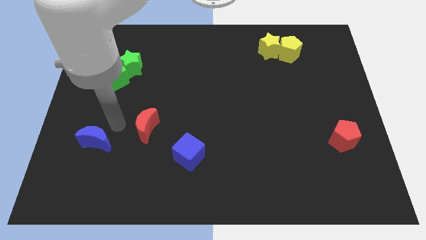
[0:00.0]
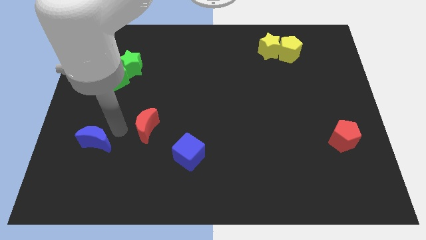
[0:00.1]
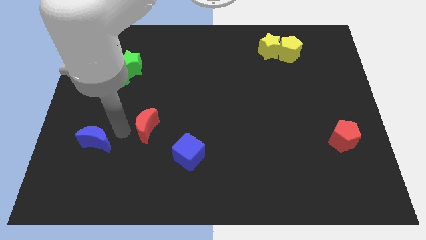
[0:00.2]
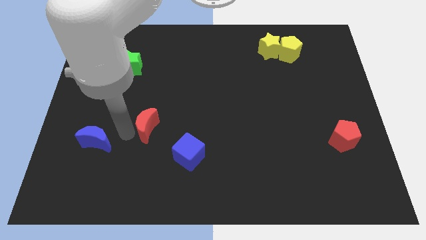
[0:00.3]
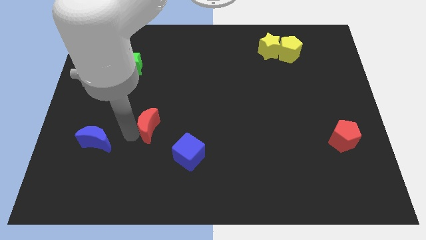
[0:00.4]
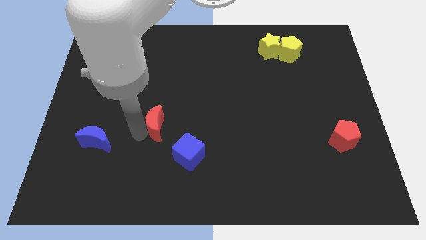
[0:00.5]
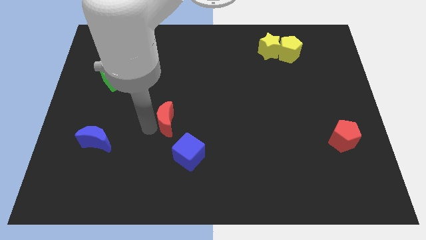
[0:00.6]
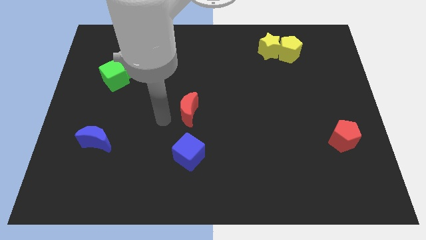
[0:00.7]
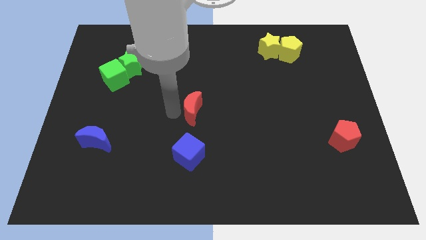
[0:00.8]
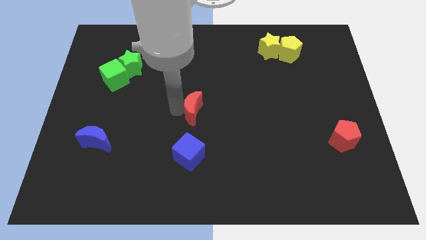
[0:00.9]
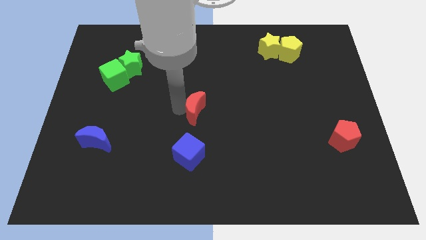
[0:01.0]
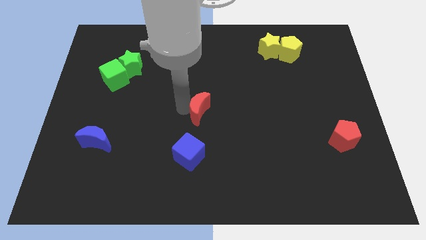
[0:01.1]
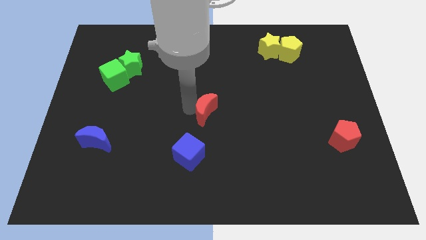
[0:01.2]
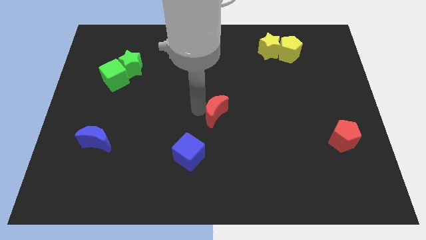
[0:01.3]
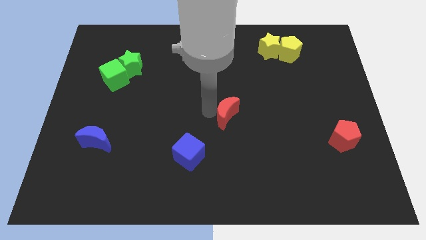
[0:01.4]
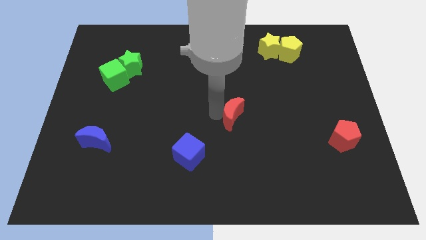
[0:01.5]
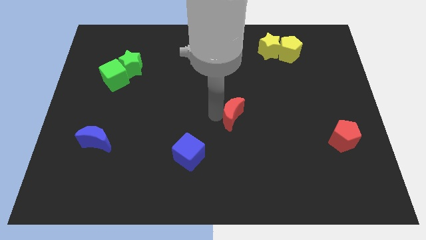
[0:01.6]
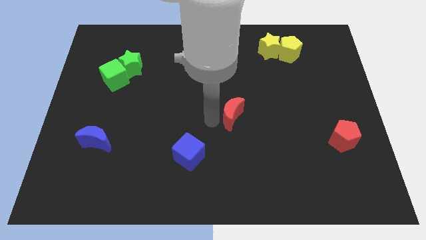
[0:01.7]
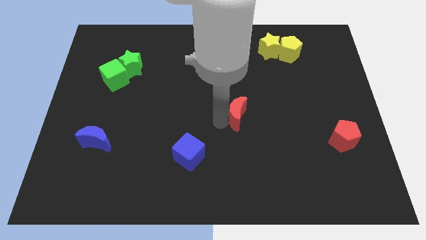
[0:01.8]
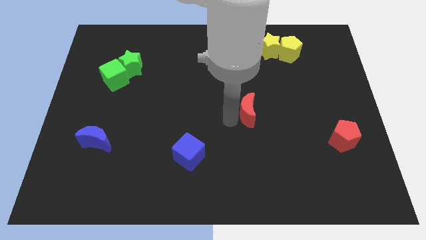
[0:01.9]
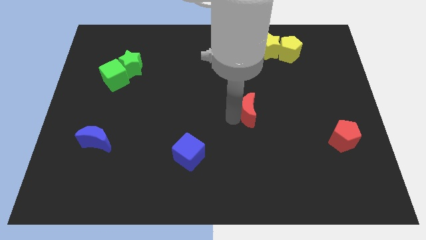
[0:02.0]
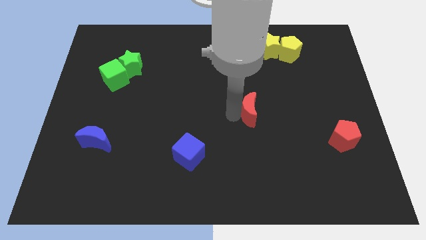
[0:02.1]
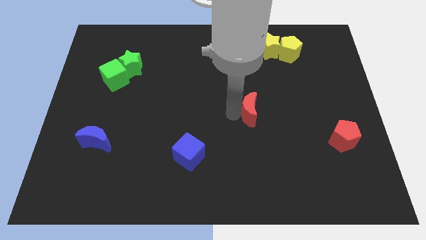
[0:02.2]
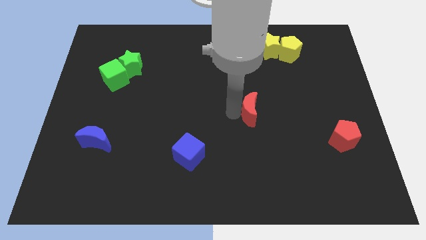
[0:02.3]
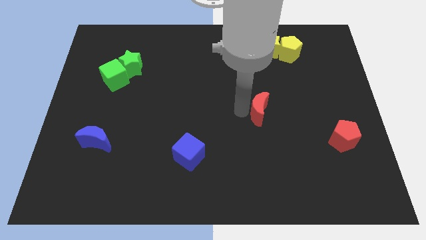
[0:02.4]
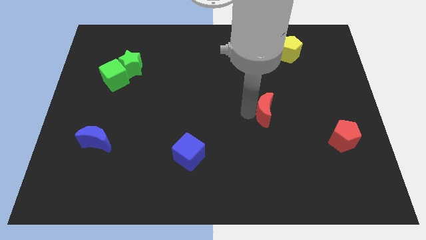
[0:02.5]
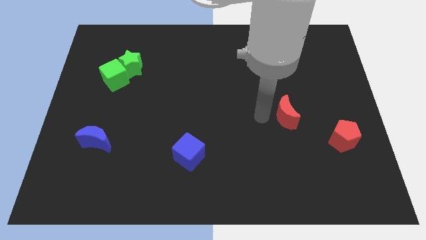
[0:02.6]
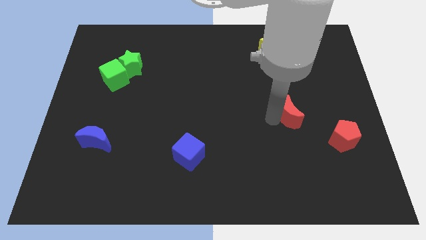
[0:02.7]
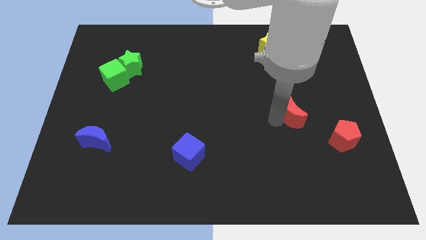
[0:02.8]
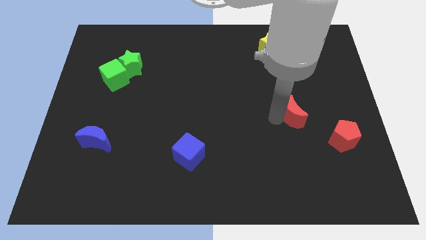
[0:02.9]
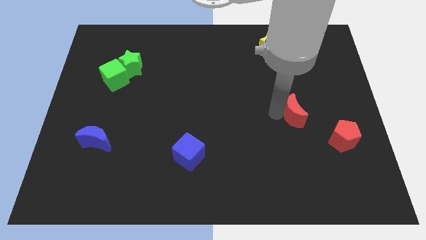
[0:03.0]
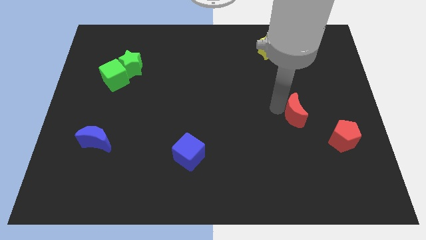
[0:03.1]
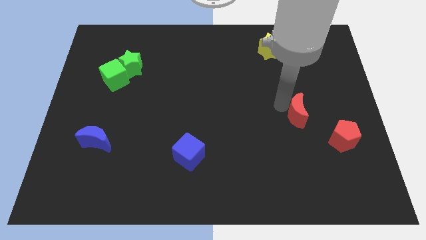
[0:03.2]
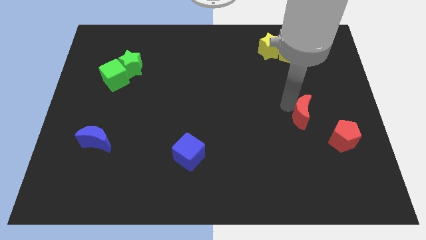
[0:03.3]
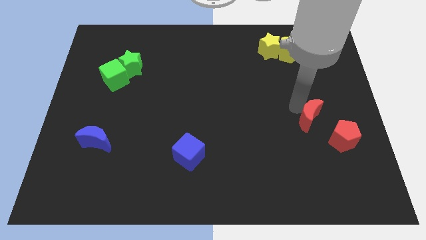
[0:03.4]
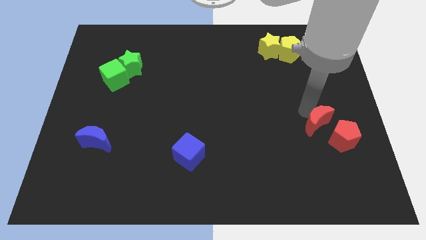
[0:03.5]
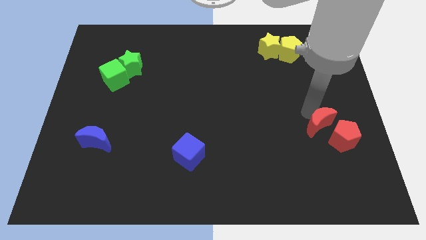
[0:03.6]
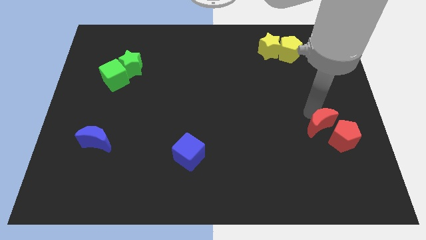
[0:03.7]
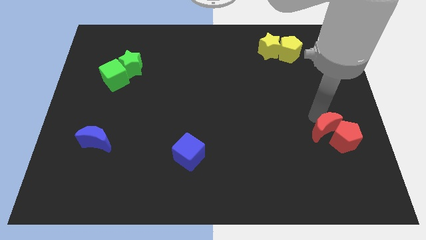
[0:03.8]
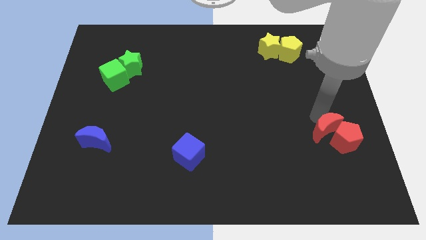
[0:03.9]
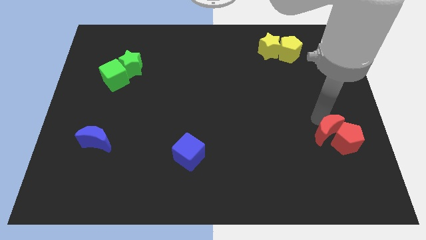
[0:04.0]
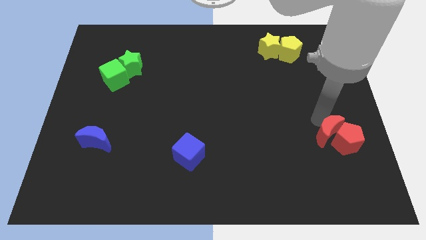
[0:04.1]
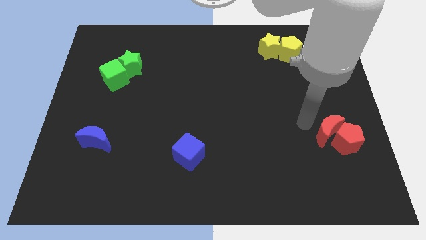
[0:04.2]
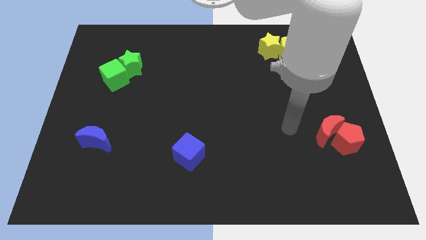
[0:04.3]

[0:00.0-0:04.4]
make the group of red blocks at the right side of the table

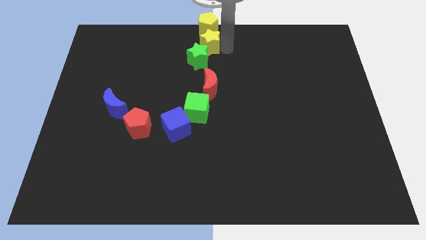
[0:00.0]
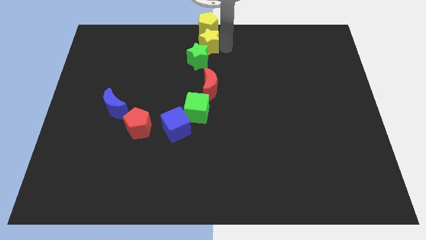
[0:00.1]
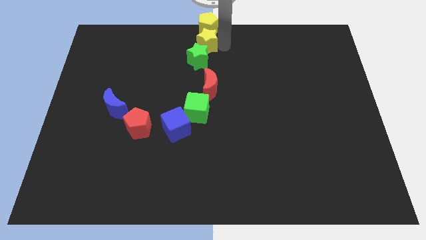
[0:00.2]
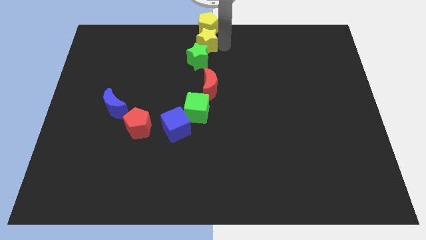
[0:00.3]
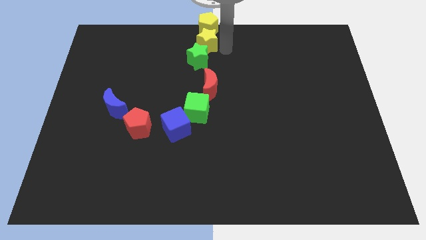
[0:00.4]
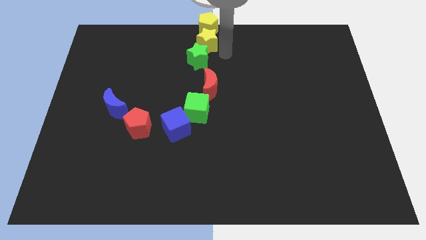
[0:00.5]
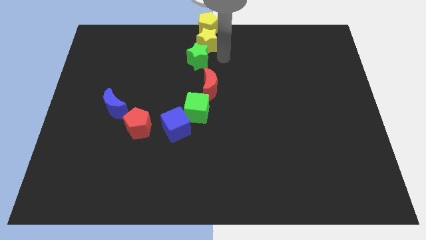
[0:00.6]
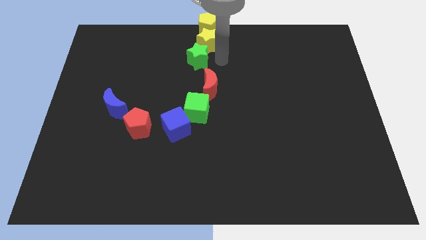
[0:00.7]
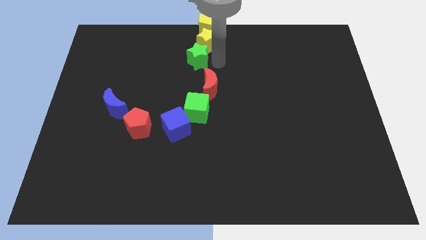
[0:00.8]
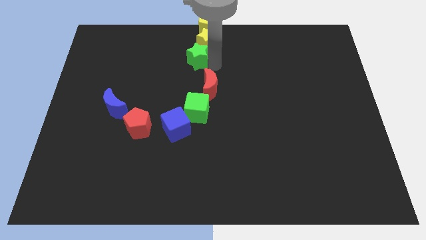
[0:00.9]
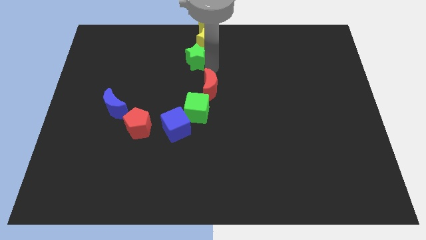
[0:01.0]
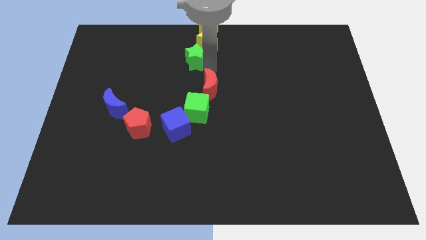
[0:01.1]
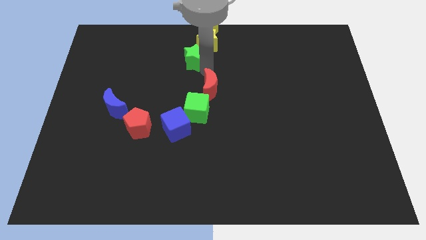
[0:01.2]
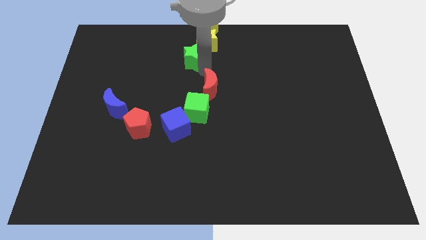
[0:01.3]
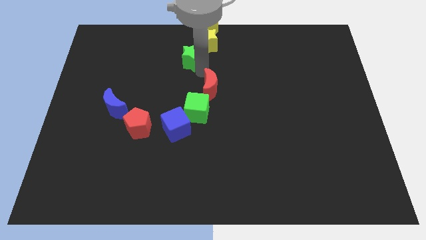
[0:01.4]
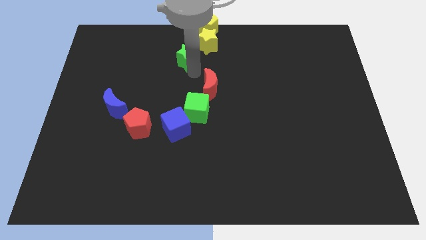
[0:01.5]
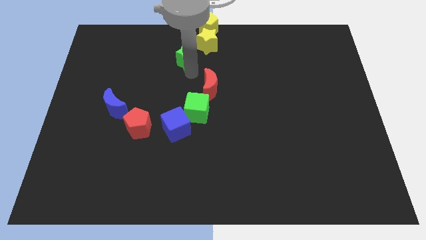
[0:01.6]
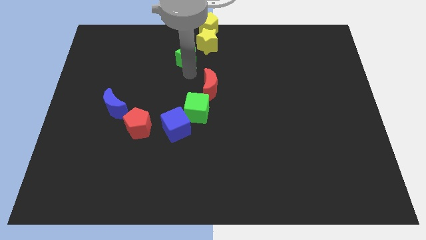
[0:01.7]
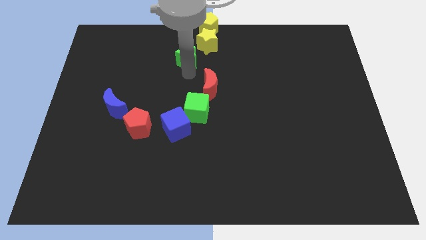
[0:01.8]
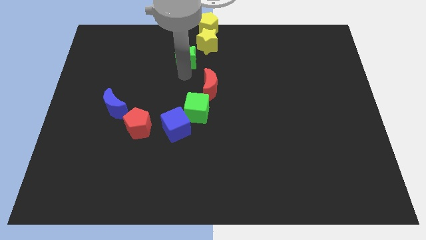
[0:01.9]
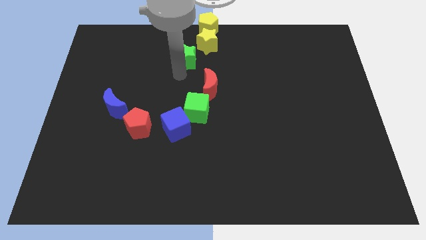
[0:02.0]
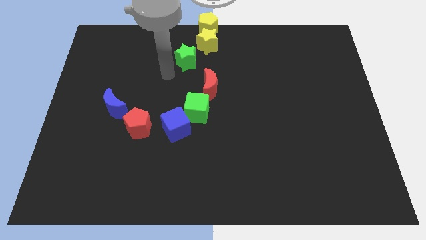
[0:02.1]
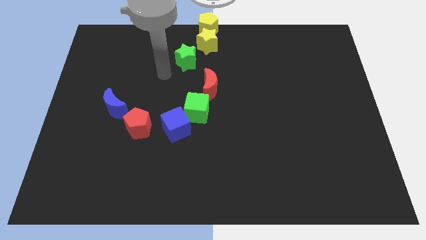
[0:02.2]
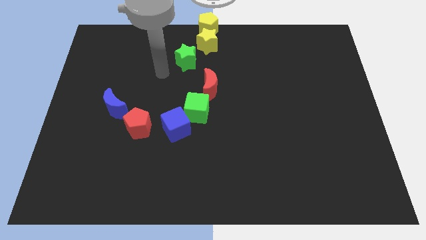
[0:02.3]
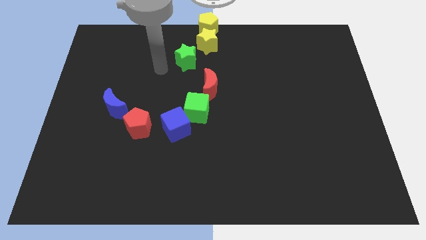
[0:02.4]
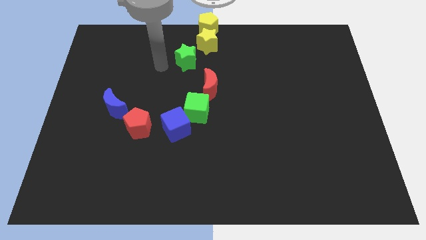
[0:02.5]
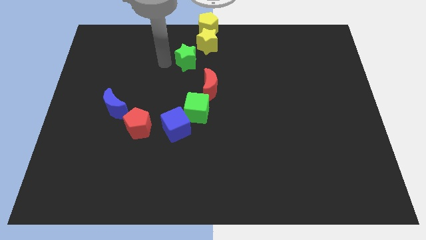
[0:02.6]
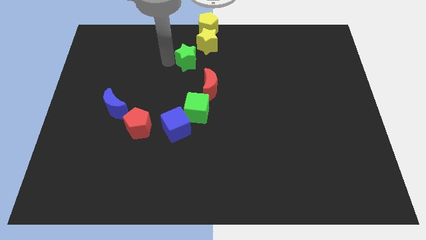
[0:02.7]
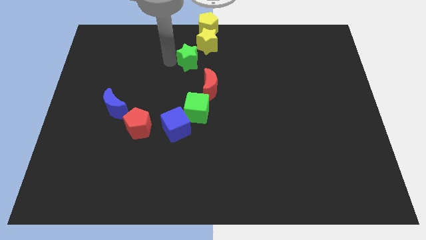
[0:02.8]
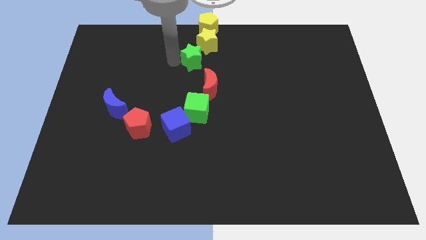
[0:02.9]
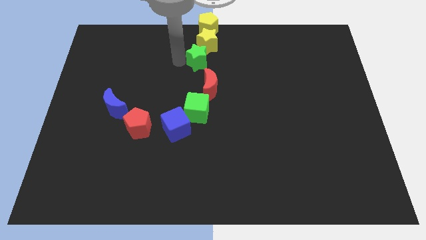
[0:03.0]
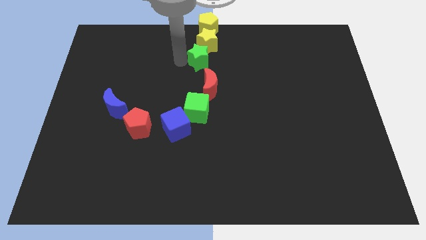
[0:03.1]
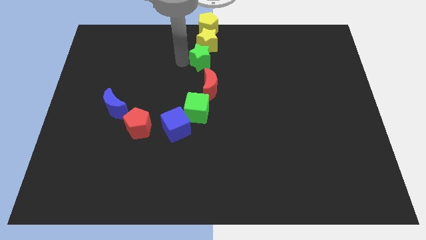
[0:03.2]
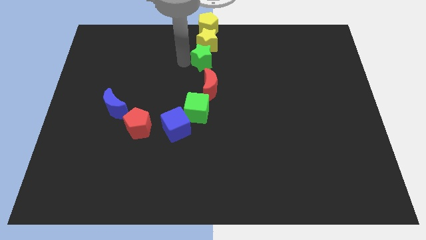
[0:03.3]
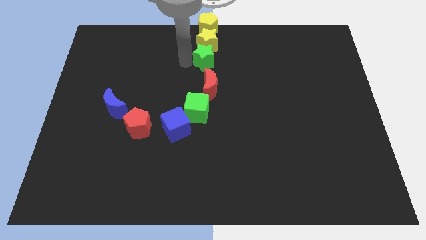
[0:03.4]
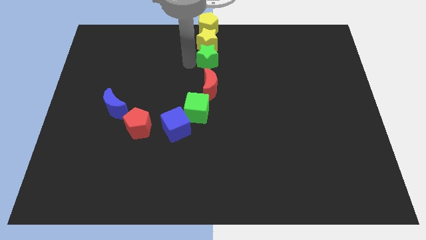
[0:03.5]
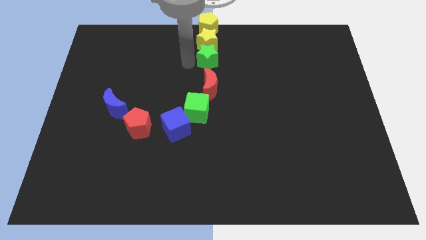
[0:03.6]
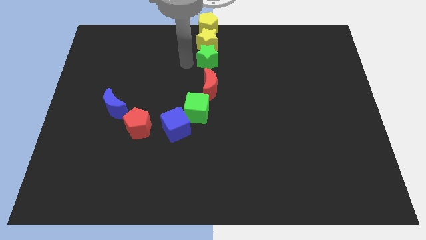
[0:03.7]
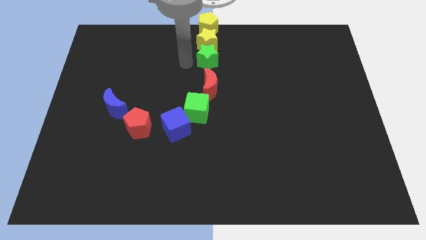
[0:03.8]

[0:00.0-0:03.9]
place a green star below the yellow star

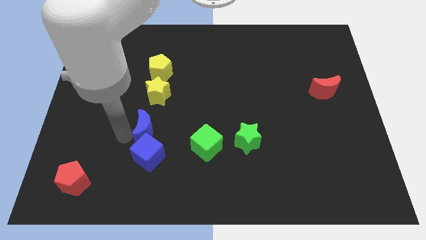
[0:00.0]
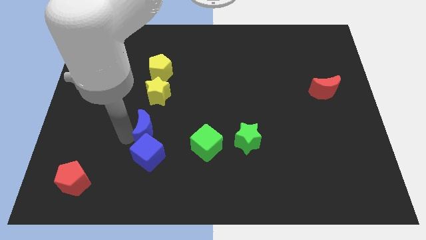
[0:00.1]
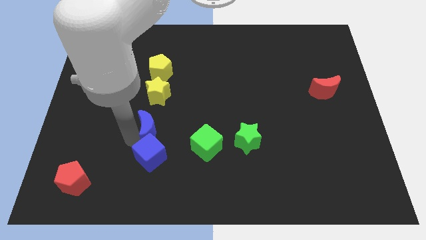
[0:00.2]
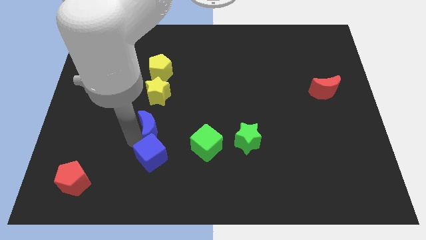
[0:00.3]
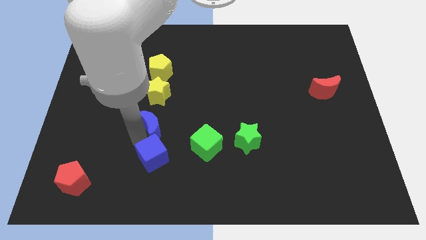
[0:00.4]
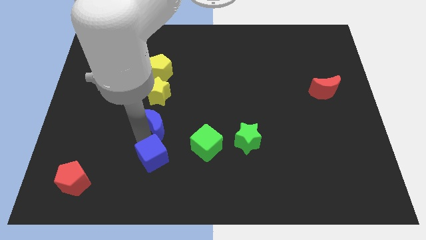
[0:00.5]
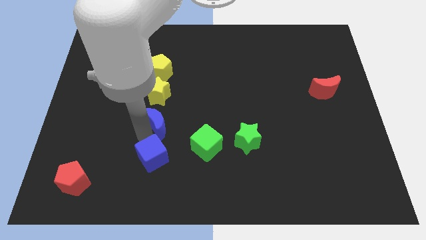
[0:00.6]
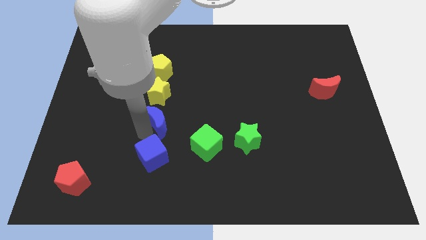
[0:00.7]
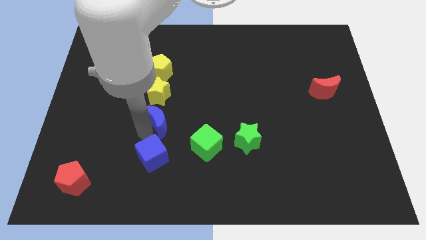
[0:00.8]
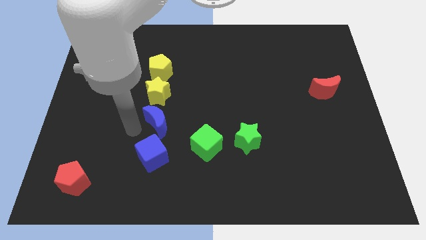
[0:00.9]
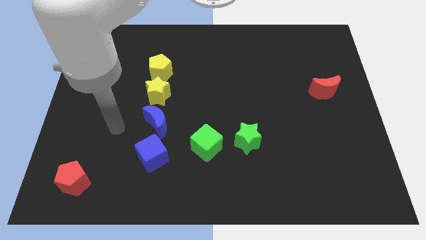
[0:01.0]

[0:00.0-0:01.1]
move the blue crescent below the yellow star
